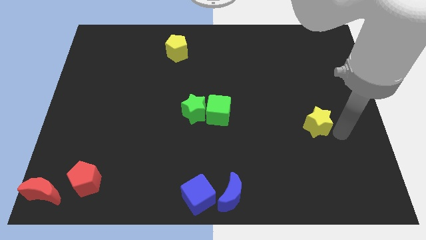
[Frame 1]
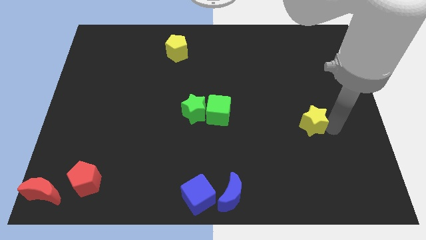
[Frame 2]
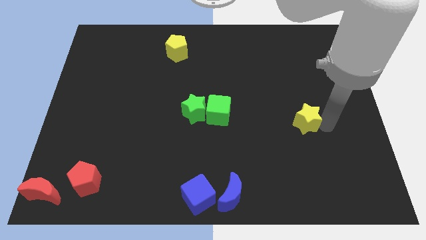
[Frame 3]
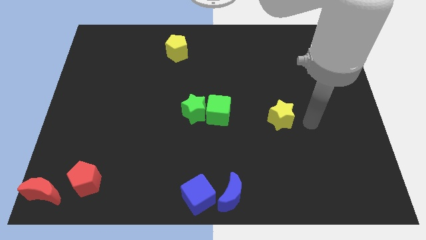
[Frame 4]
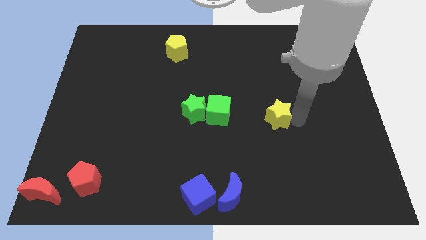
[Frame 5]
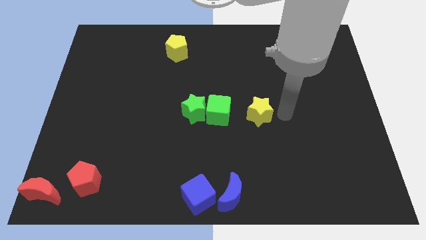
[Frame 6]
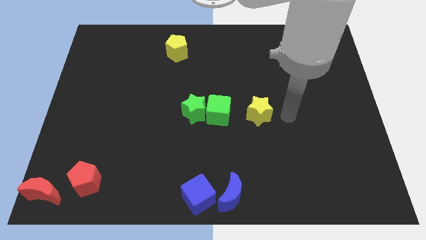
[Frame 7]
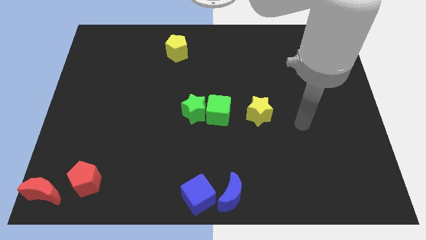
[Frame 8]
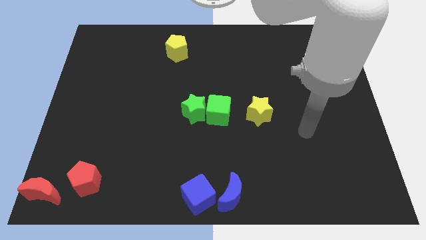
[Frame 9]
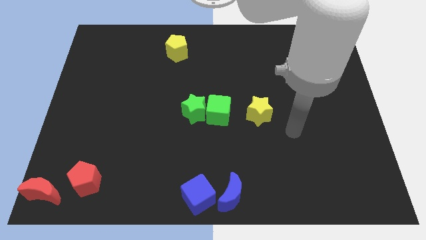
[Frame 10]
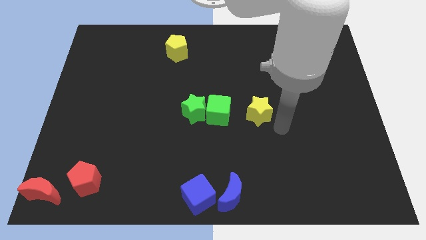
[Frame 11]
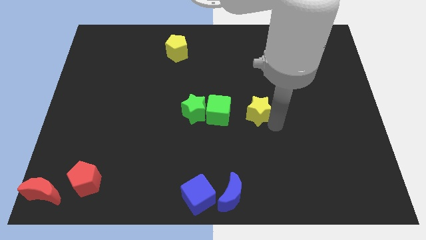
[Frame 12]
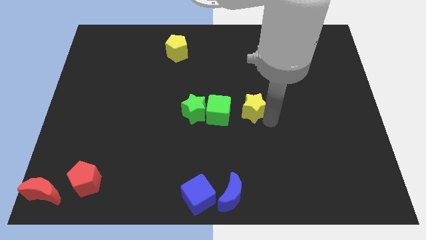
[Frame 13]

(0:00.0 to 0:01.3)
place the yellow star right to the green cube

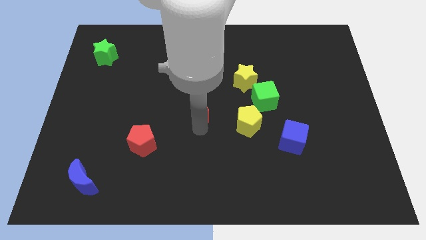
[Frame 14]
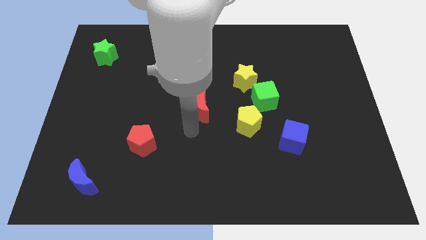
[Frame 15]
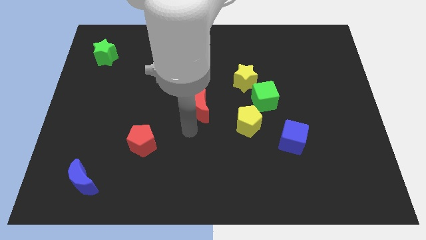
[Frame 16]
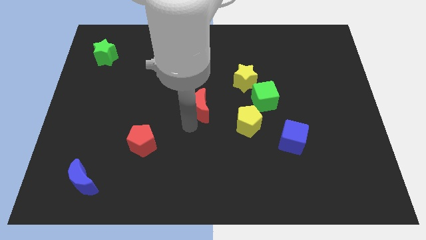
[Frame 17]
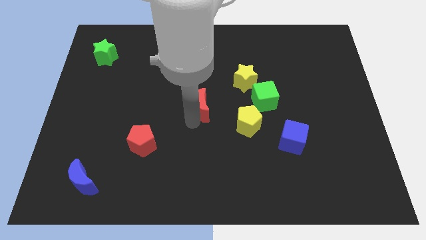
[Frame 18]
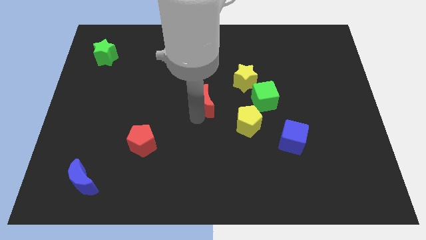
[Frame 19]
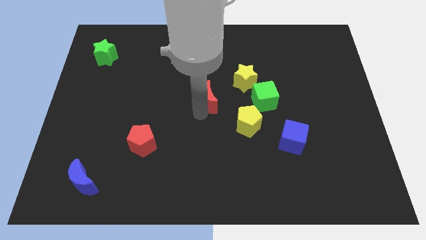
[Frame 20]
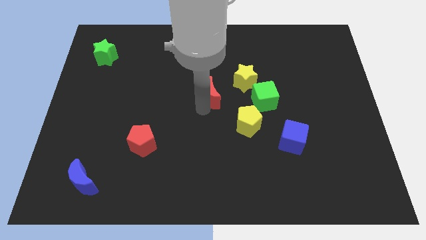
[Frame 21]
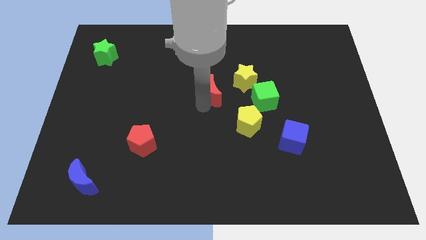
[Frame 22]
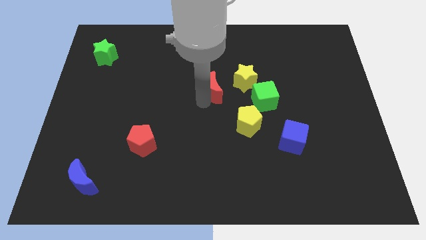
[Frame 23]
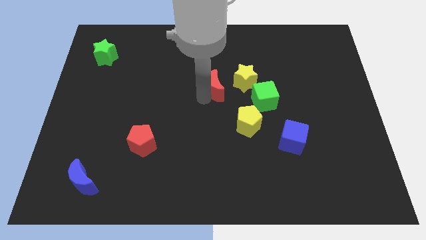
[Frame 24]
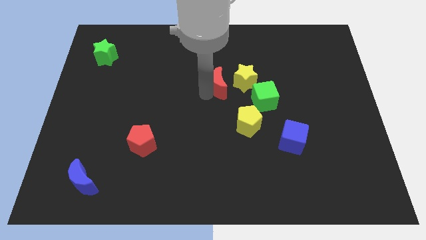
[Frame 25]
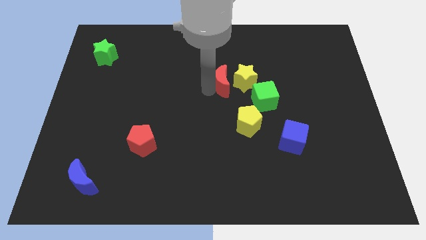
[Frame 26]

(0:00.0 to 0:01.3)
place red moon to the left side of the yellow pentagon

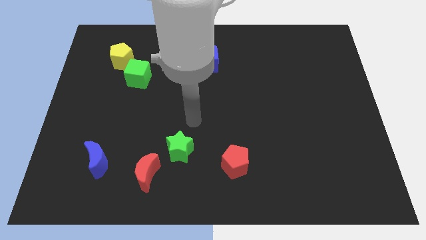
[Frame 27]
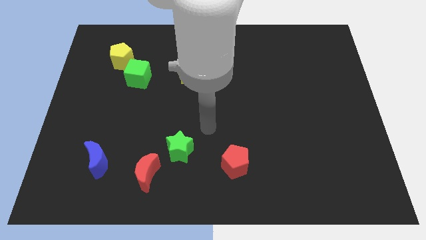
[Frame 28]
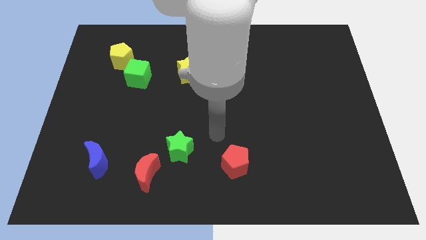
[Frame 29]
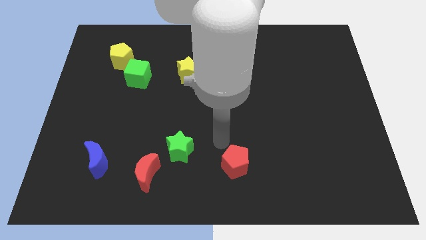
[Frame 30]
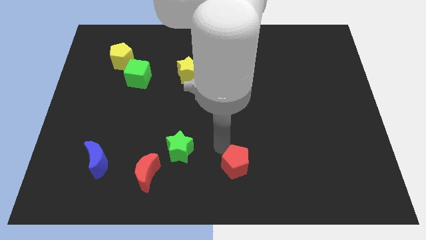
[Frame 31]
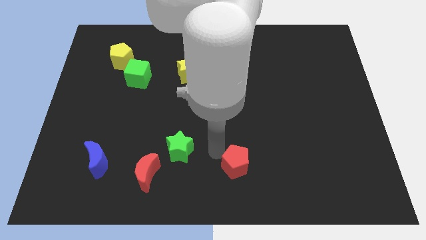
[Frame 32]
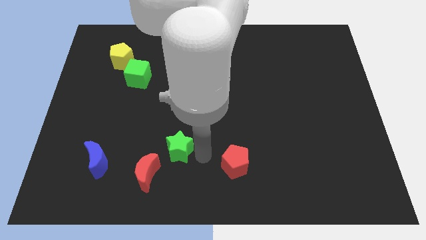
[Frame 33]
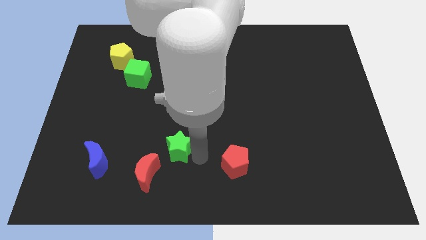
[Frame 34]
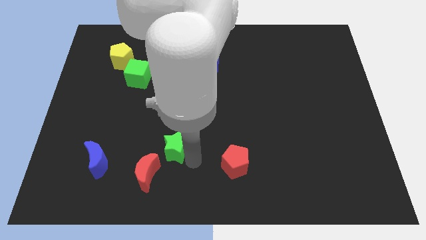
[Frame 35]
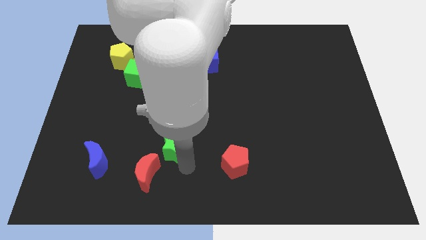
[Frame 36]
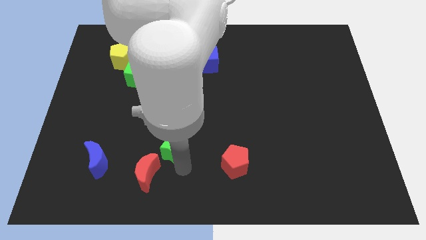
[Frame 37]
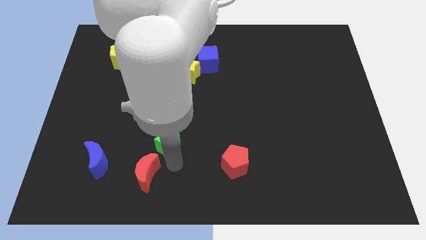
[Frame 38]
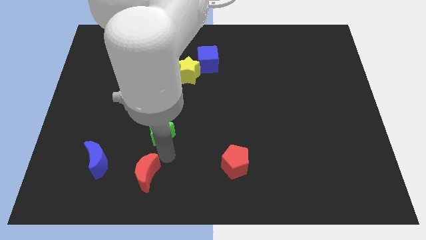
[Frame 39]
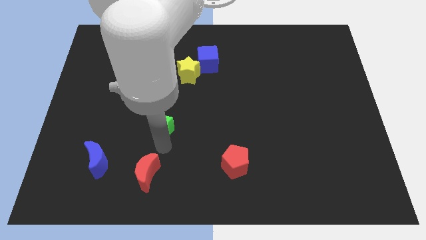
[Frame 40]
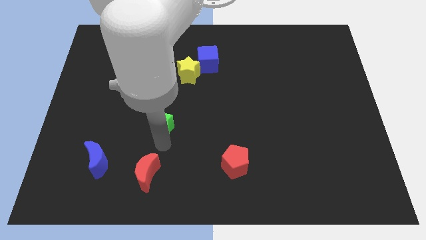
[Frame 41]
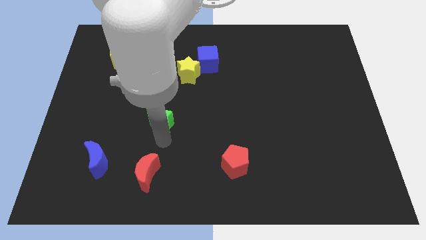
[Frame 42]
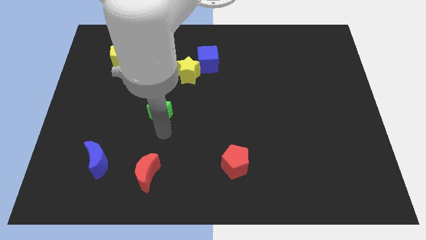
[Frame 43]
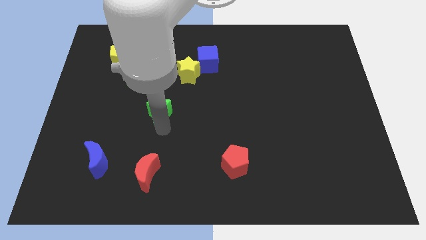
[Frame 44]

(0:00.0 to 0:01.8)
push the green star towards the green cube

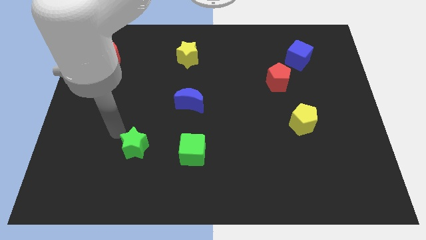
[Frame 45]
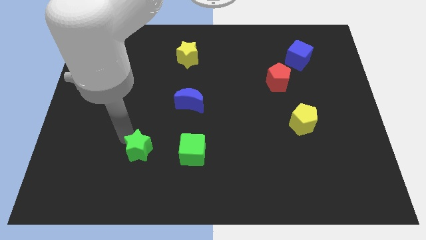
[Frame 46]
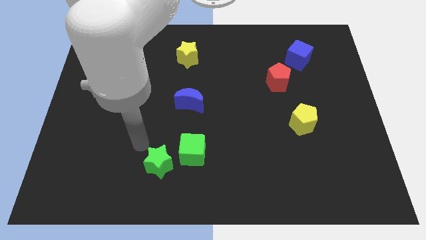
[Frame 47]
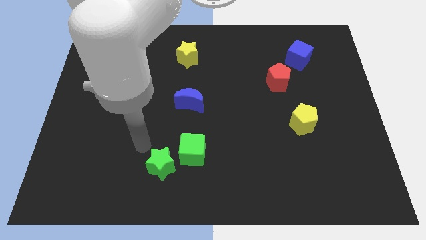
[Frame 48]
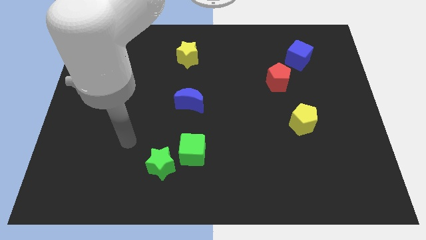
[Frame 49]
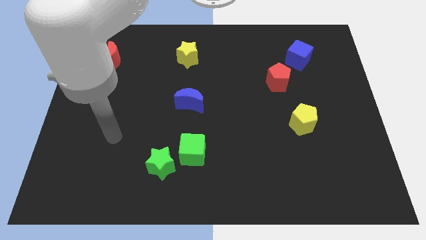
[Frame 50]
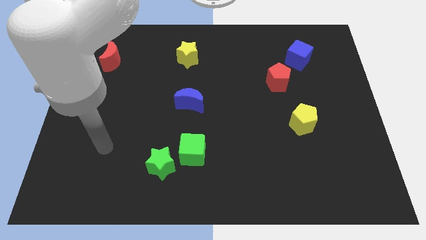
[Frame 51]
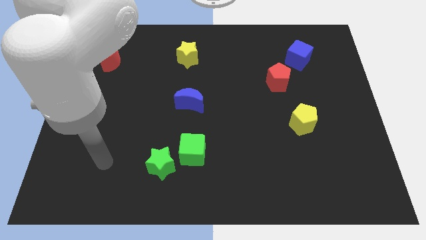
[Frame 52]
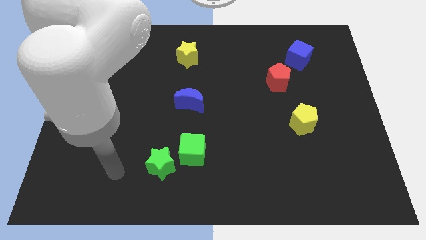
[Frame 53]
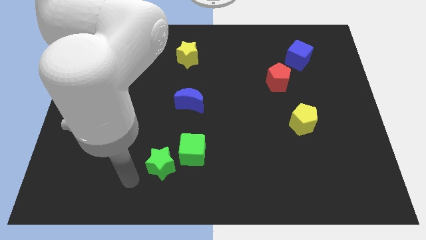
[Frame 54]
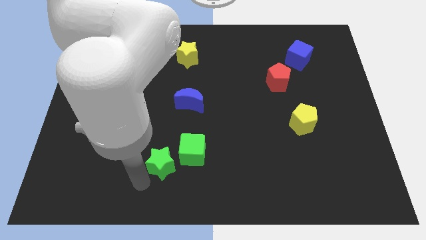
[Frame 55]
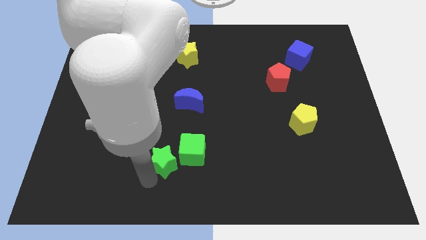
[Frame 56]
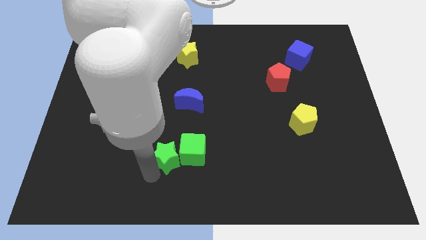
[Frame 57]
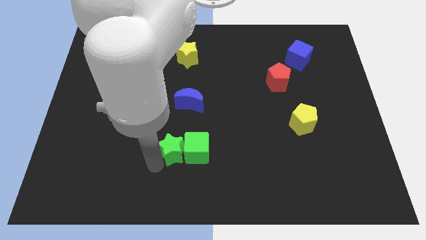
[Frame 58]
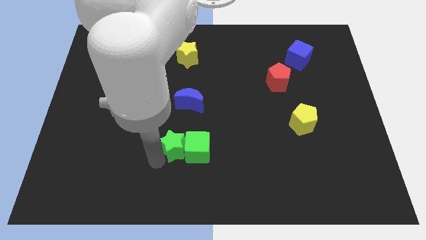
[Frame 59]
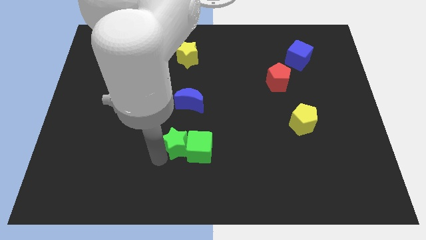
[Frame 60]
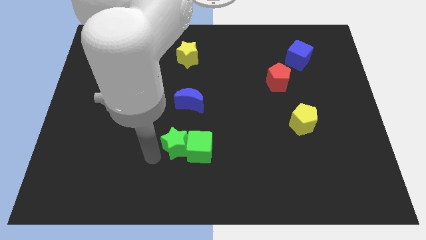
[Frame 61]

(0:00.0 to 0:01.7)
push the green star into the green cube

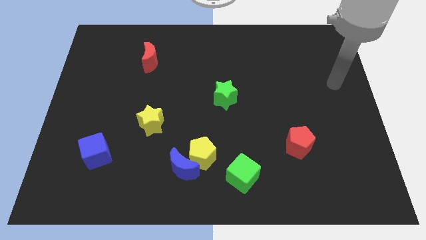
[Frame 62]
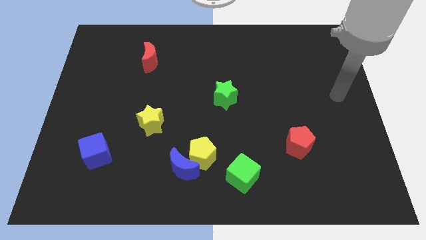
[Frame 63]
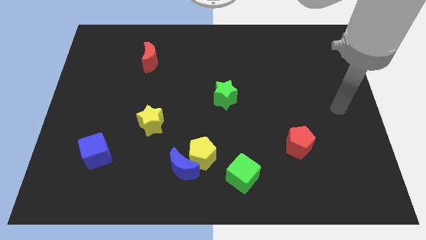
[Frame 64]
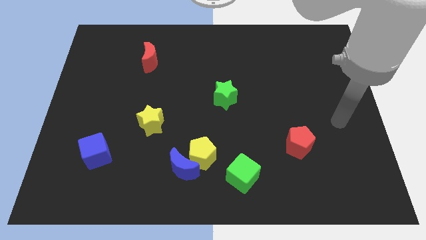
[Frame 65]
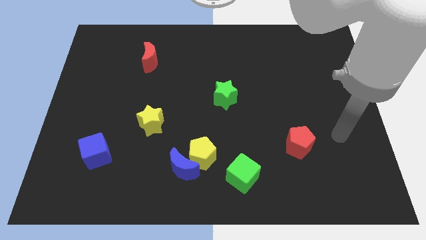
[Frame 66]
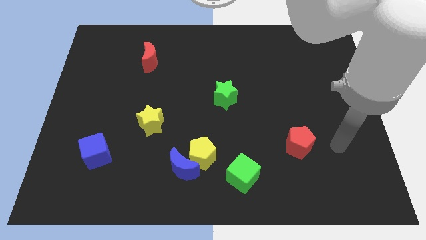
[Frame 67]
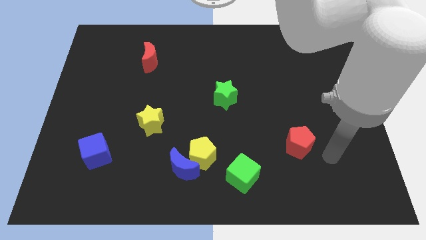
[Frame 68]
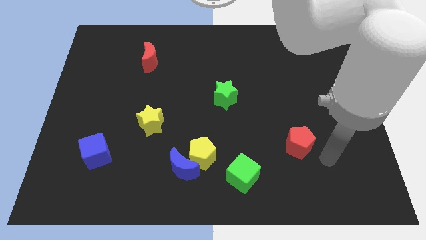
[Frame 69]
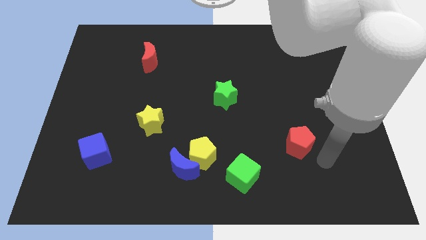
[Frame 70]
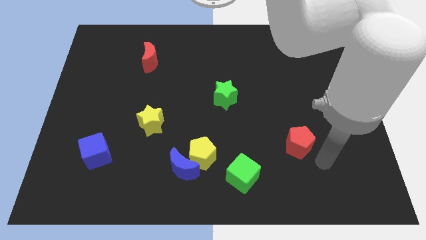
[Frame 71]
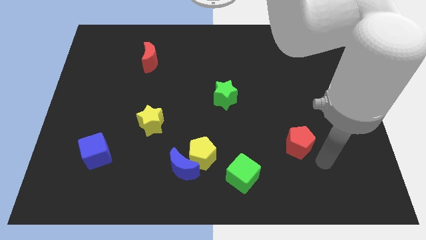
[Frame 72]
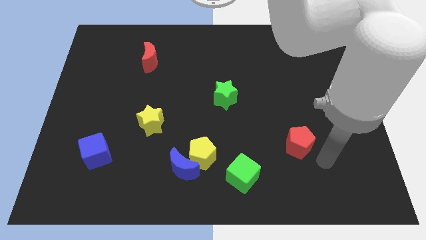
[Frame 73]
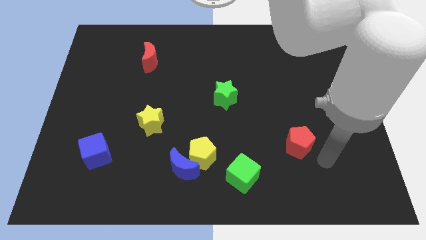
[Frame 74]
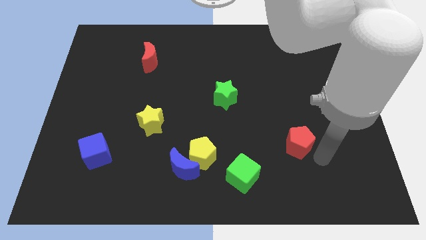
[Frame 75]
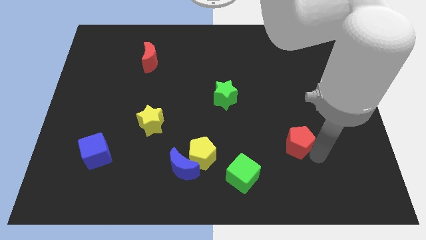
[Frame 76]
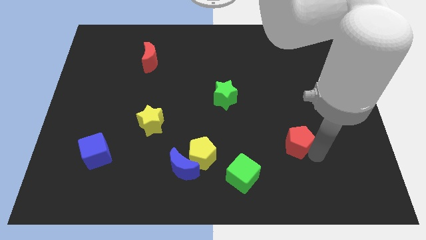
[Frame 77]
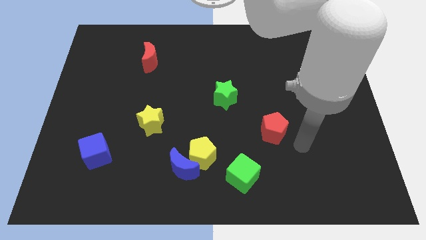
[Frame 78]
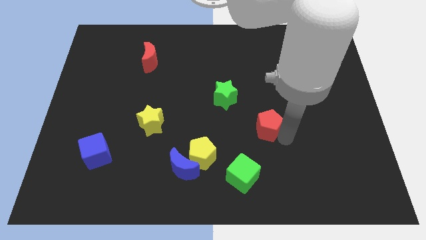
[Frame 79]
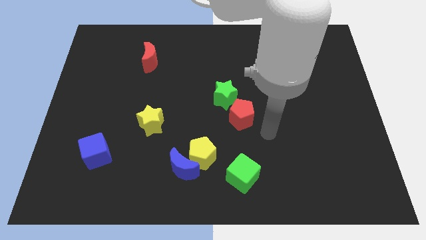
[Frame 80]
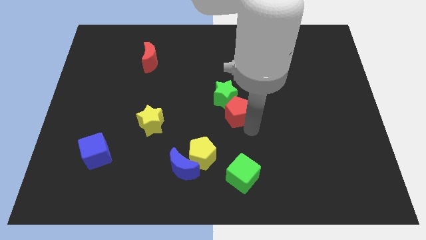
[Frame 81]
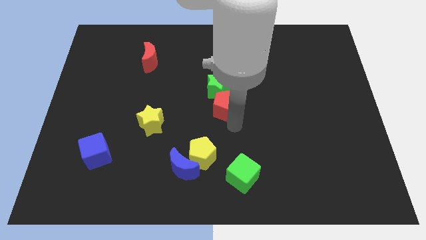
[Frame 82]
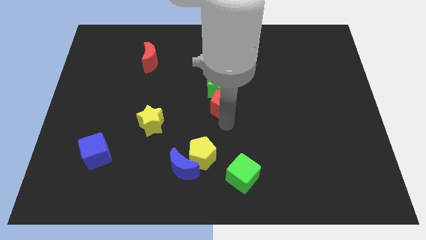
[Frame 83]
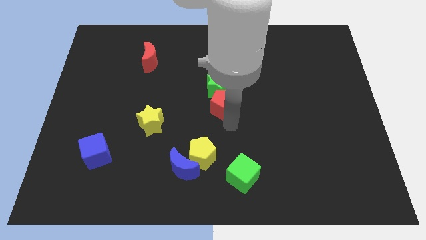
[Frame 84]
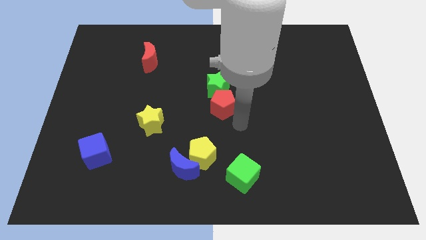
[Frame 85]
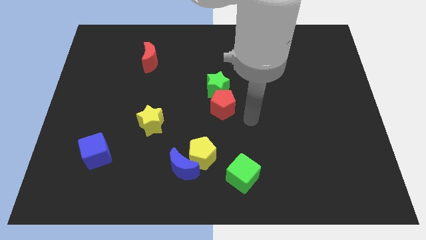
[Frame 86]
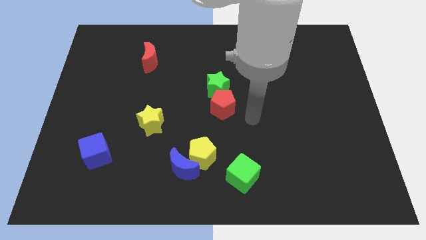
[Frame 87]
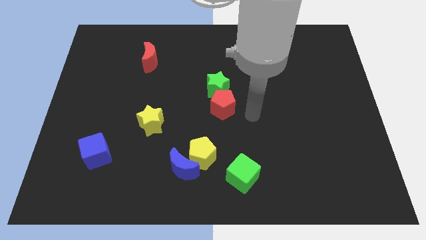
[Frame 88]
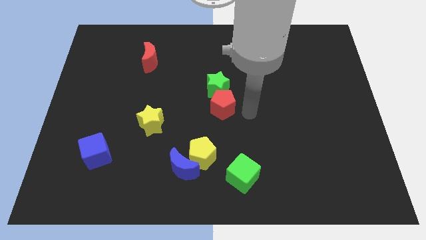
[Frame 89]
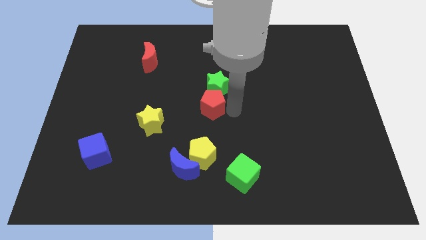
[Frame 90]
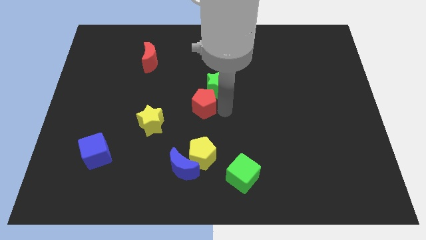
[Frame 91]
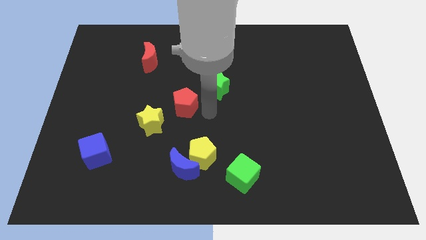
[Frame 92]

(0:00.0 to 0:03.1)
place the red pentagon in between the green star and yellow star
